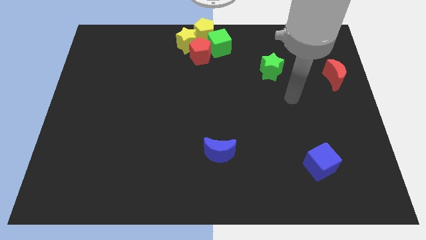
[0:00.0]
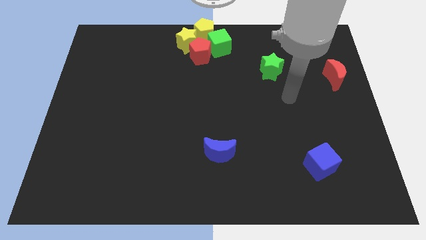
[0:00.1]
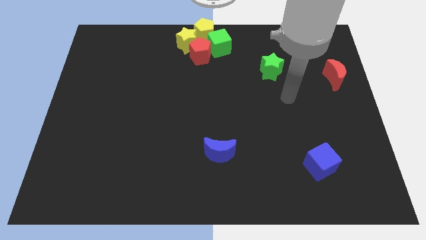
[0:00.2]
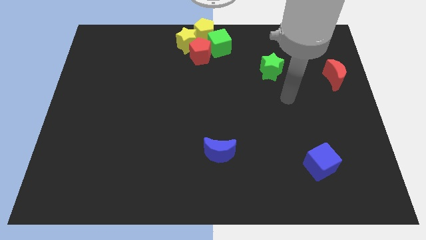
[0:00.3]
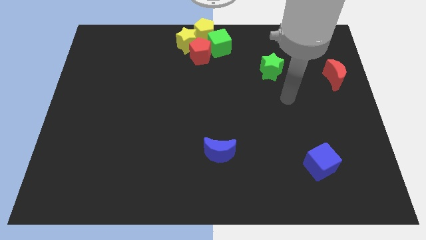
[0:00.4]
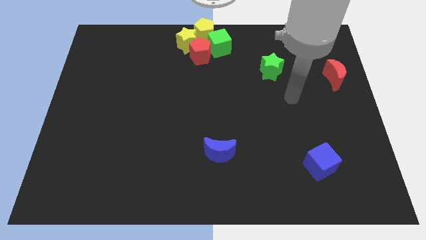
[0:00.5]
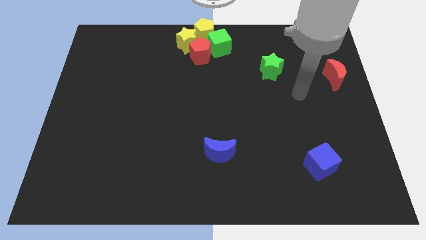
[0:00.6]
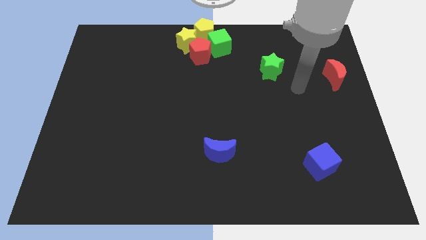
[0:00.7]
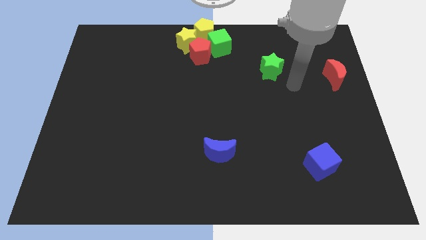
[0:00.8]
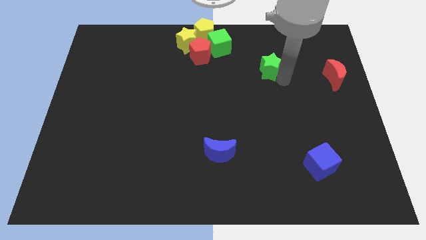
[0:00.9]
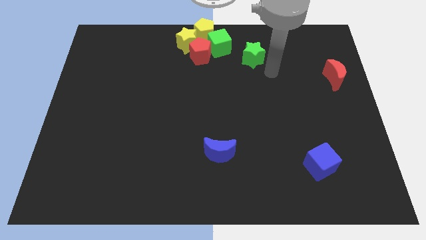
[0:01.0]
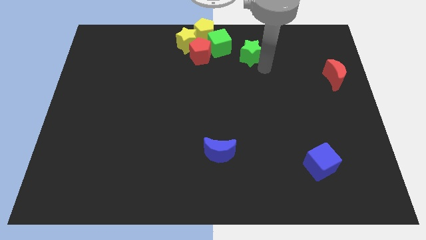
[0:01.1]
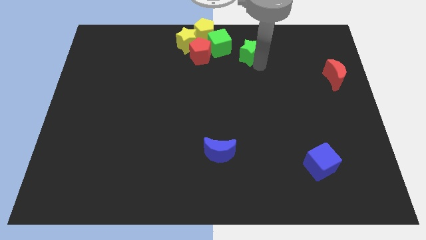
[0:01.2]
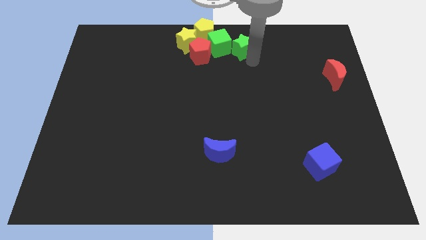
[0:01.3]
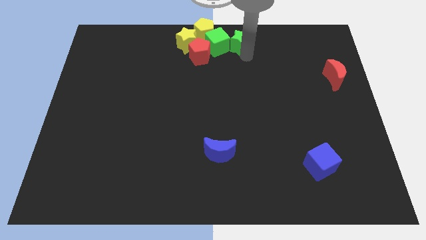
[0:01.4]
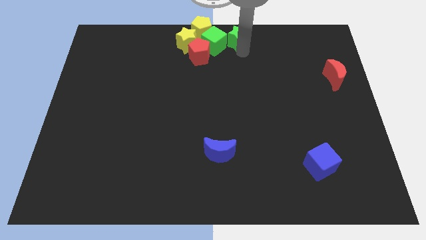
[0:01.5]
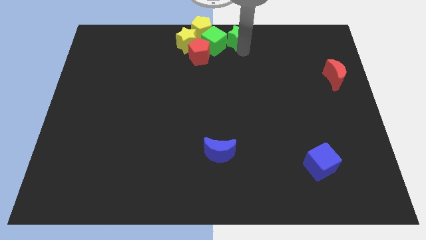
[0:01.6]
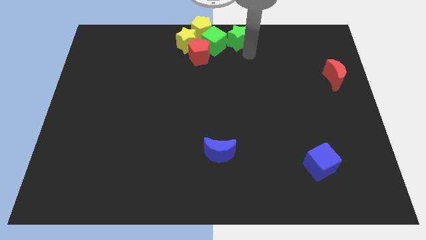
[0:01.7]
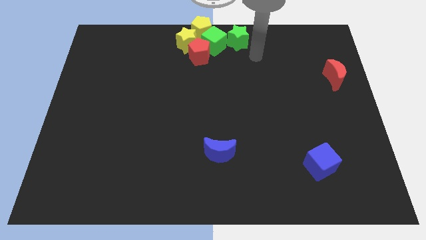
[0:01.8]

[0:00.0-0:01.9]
slide the green star into the green cube

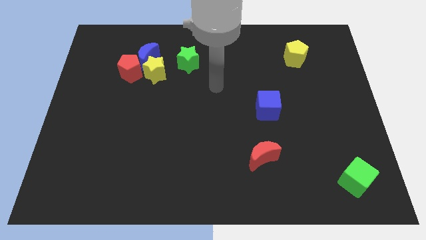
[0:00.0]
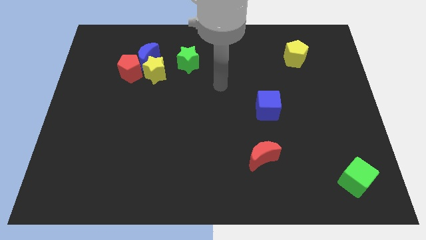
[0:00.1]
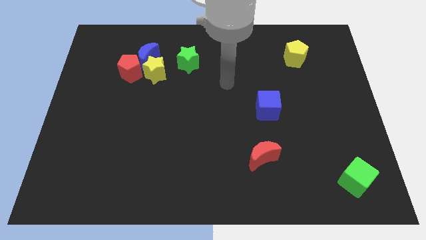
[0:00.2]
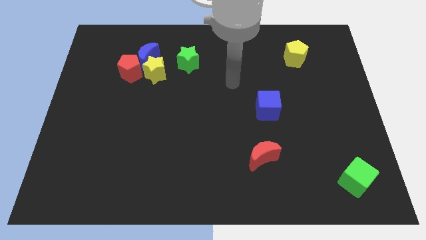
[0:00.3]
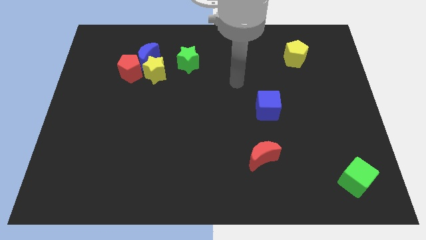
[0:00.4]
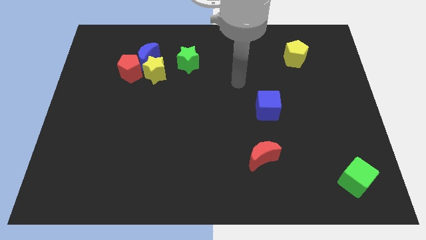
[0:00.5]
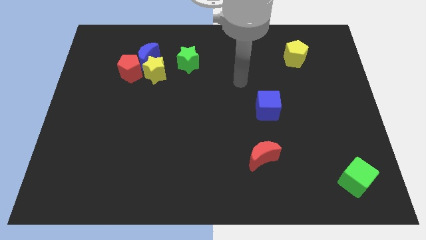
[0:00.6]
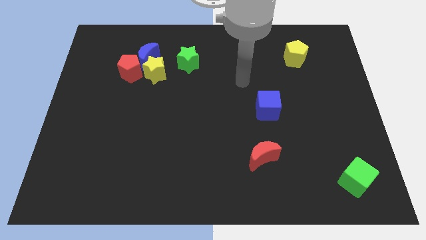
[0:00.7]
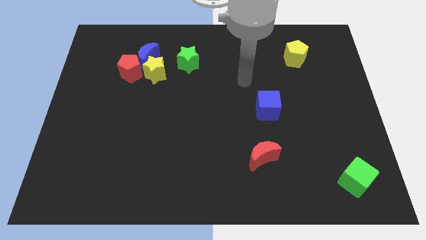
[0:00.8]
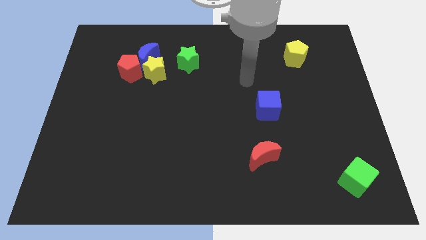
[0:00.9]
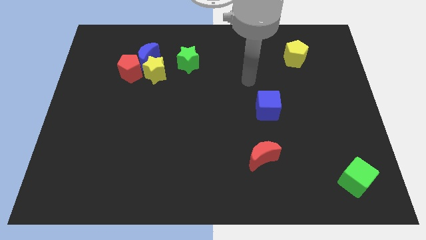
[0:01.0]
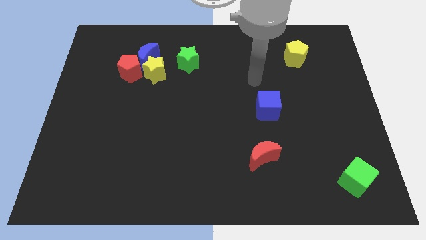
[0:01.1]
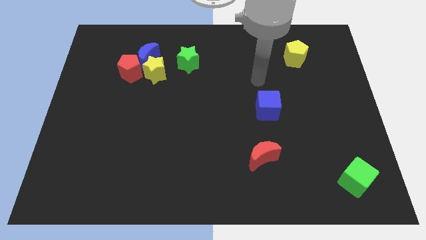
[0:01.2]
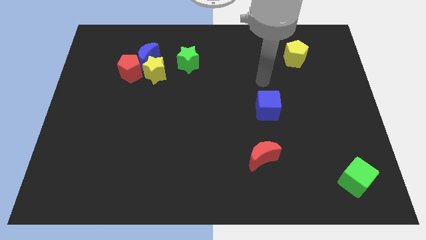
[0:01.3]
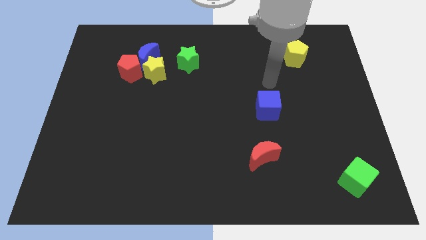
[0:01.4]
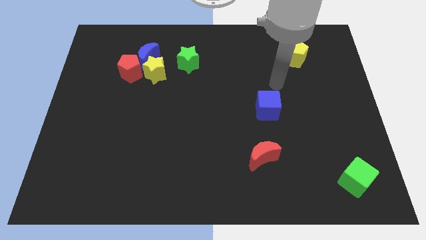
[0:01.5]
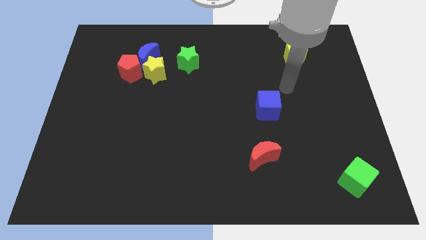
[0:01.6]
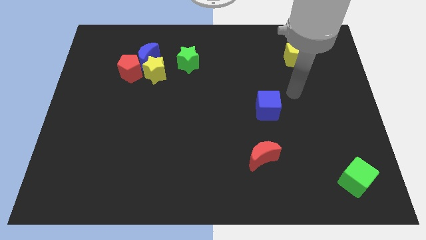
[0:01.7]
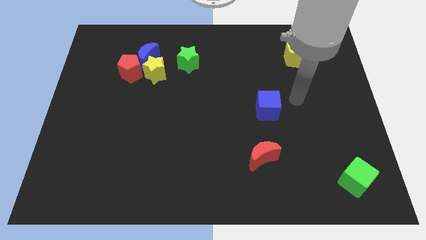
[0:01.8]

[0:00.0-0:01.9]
point your hand at the top right side of the blue cube

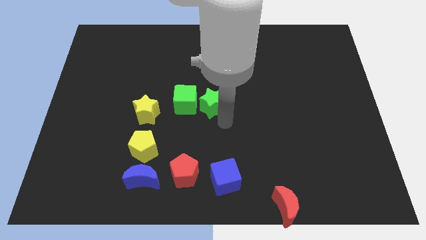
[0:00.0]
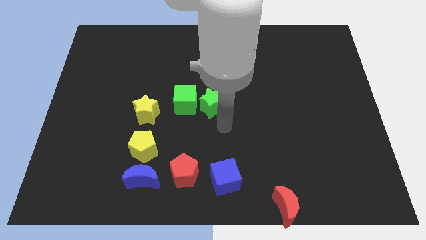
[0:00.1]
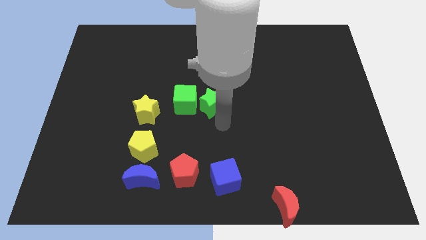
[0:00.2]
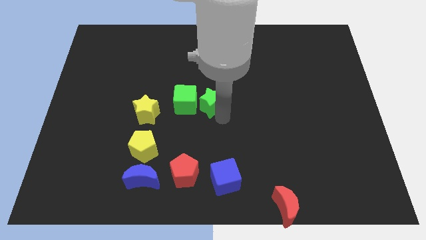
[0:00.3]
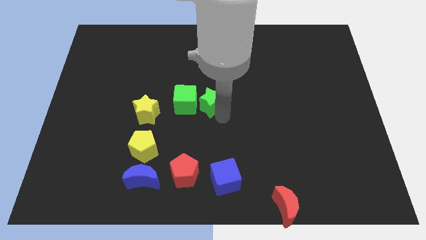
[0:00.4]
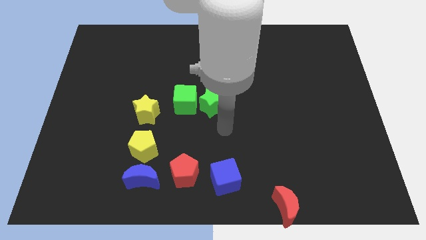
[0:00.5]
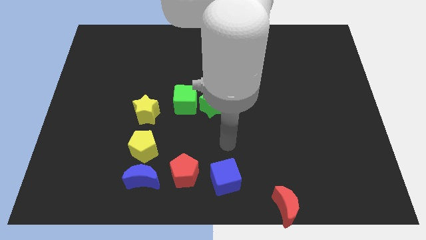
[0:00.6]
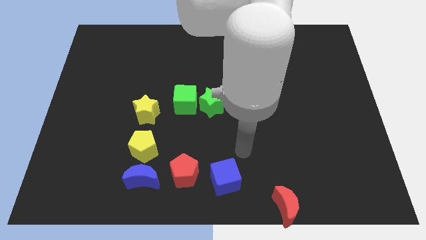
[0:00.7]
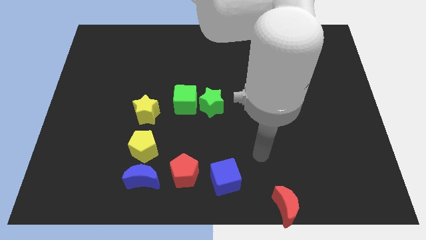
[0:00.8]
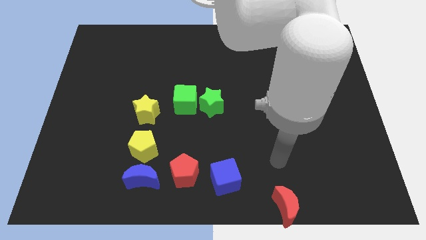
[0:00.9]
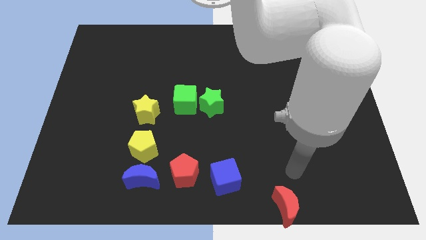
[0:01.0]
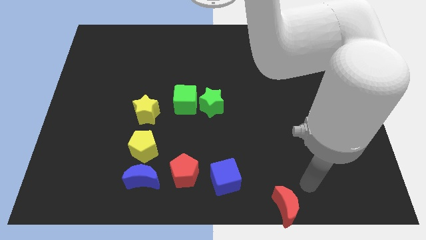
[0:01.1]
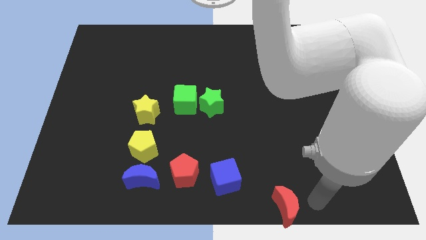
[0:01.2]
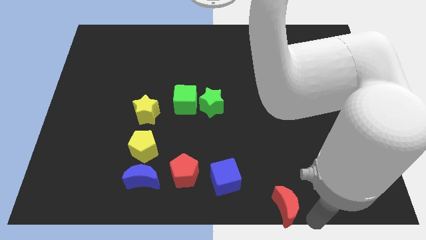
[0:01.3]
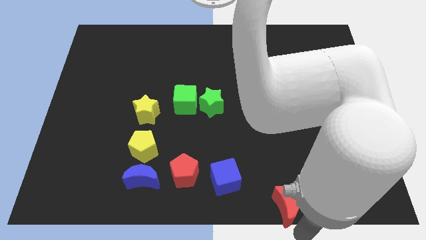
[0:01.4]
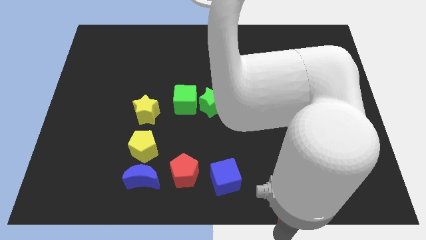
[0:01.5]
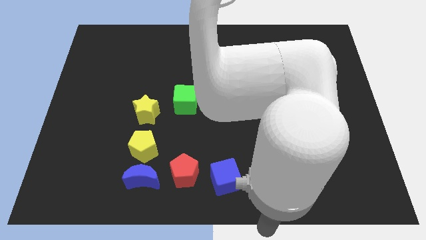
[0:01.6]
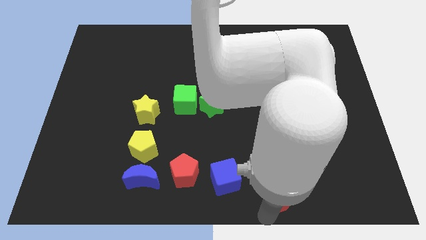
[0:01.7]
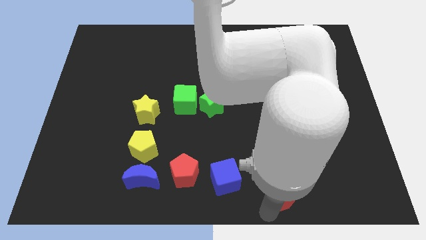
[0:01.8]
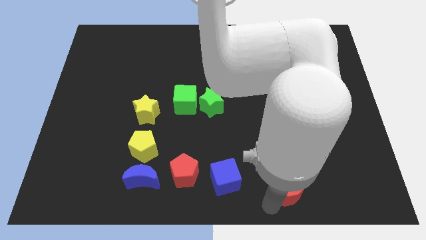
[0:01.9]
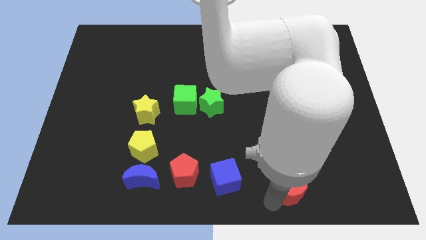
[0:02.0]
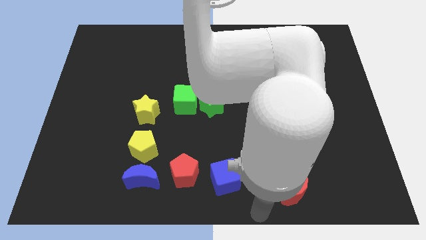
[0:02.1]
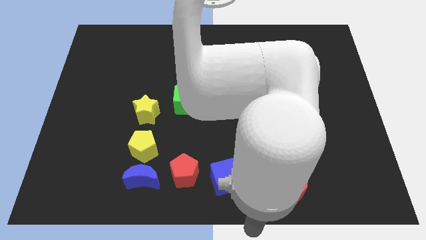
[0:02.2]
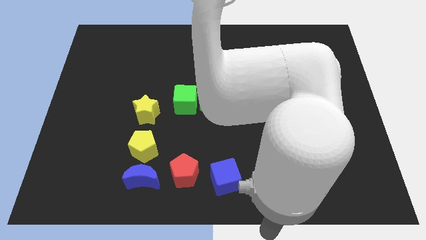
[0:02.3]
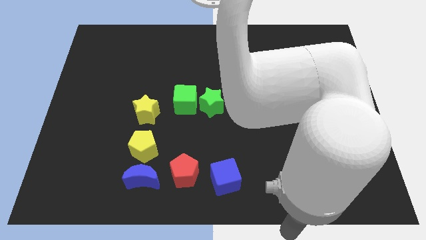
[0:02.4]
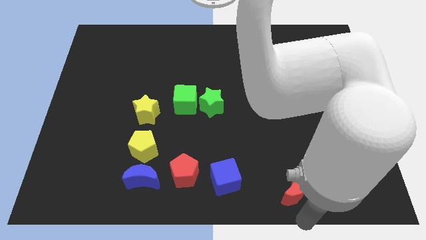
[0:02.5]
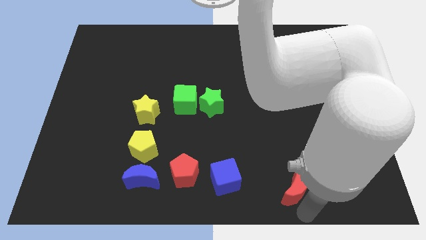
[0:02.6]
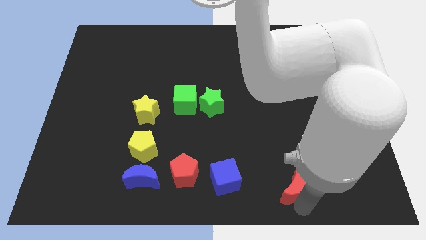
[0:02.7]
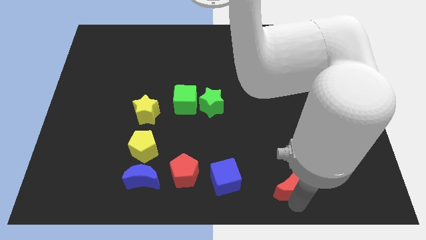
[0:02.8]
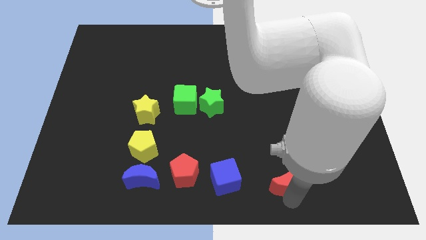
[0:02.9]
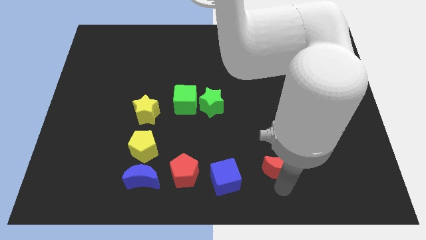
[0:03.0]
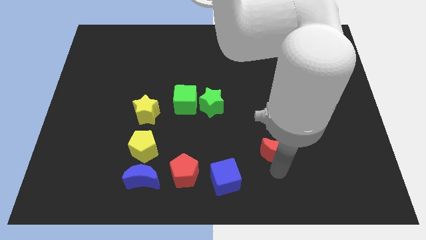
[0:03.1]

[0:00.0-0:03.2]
move the red crescent horizontal to the blue cube

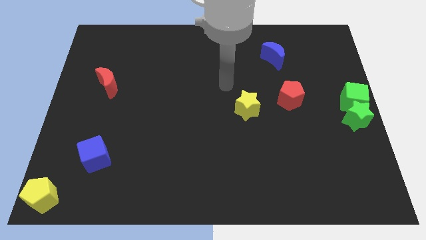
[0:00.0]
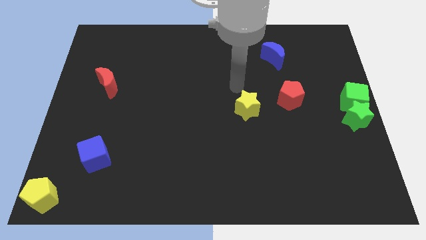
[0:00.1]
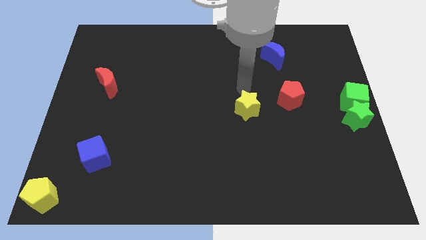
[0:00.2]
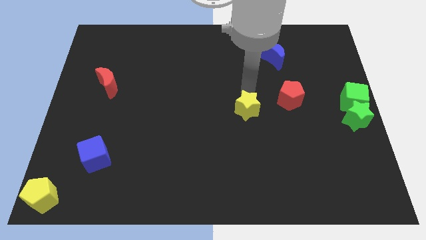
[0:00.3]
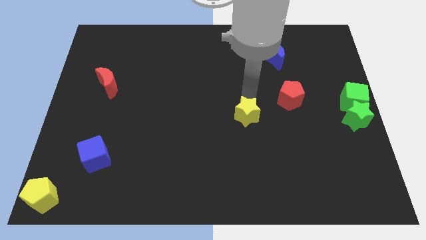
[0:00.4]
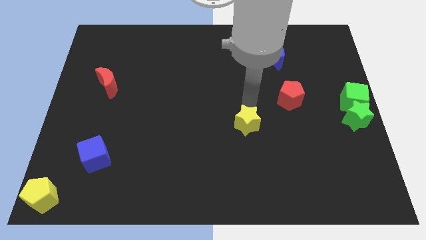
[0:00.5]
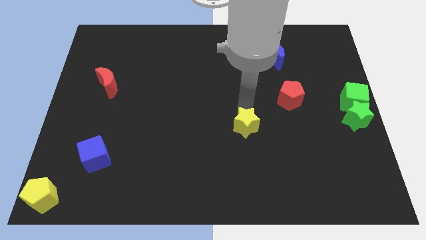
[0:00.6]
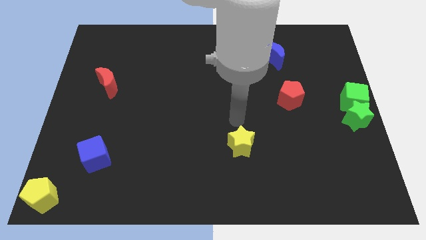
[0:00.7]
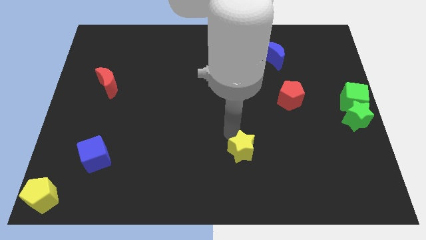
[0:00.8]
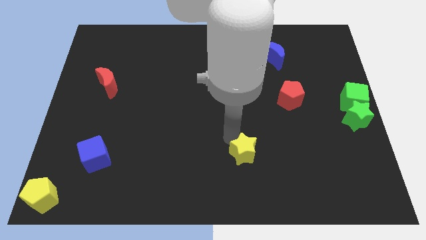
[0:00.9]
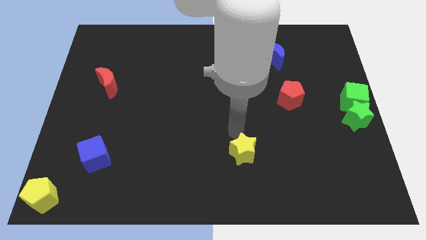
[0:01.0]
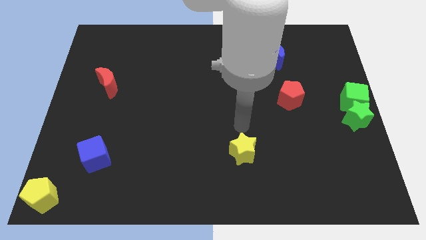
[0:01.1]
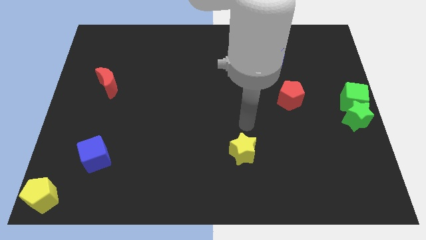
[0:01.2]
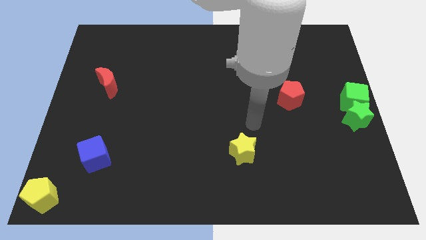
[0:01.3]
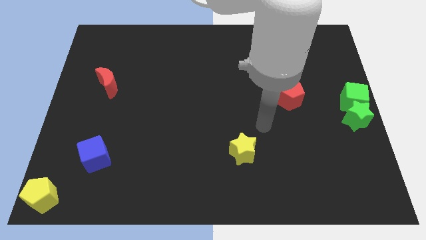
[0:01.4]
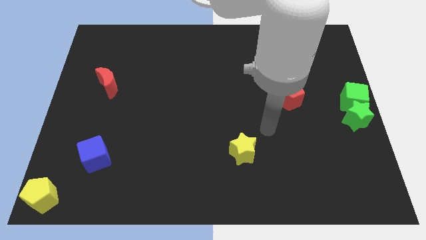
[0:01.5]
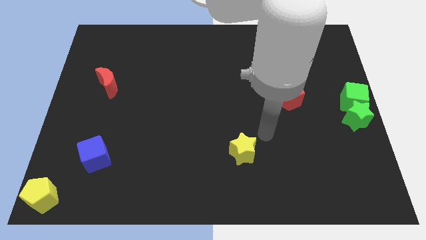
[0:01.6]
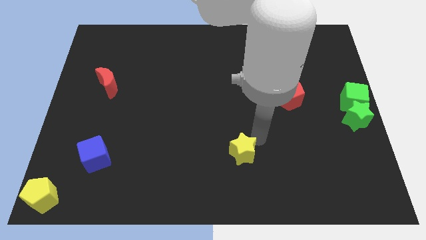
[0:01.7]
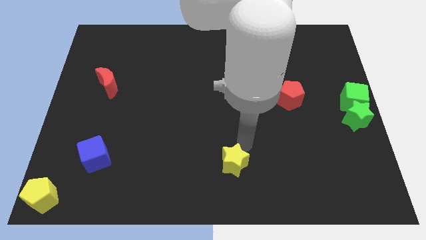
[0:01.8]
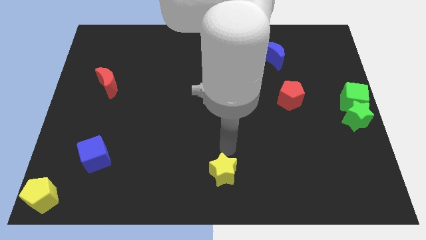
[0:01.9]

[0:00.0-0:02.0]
push the yellow star downward
